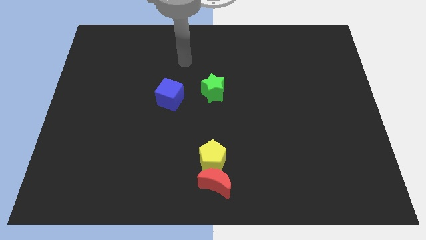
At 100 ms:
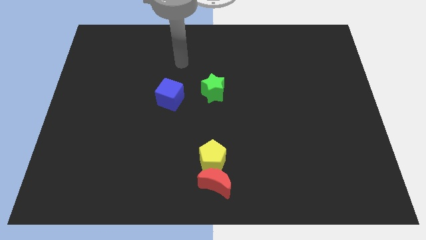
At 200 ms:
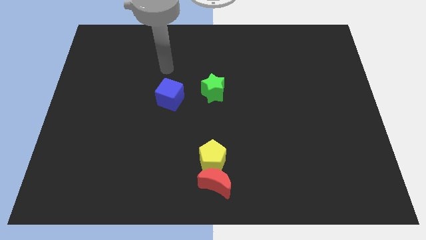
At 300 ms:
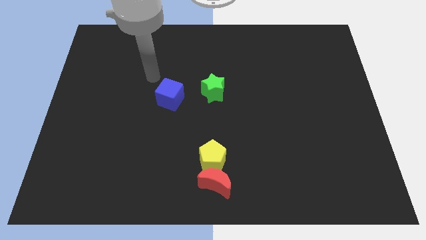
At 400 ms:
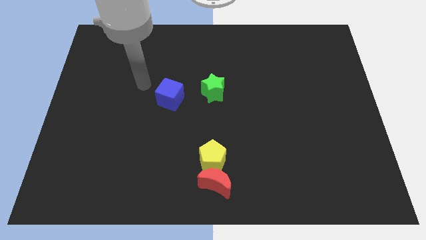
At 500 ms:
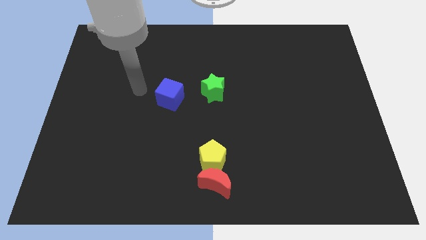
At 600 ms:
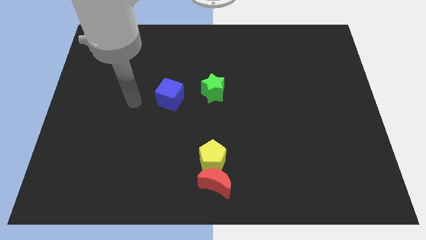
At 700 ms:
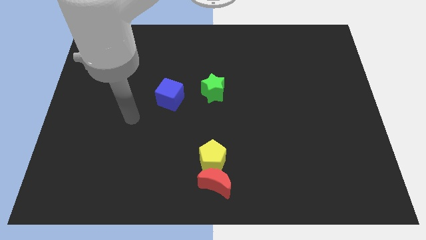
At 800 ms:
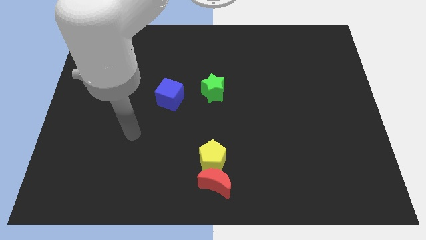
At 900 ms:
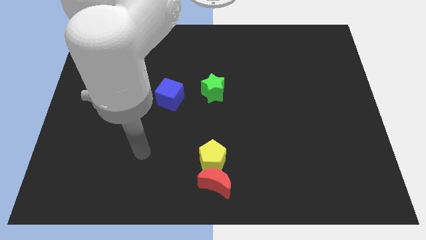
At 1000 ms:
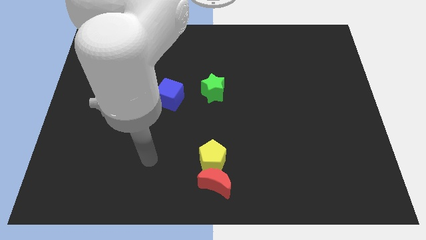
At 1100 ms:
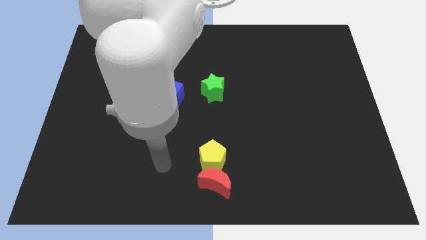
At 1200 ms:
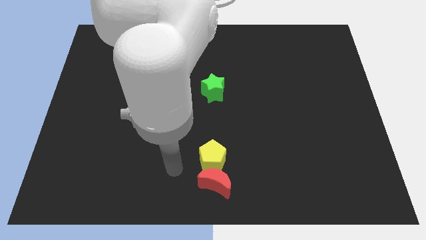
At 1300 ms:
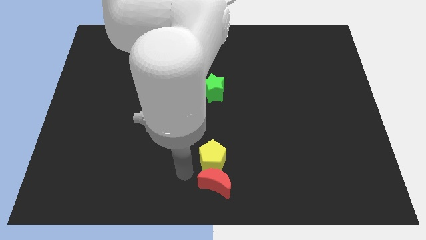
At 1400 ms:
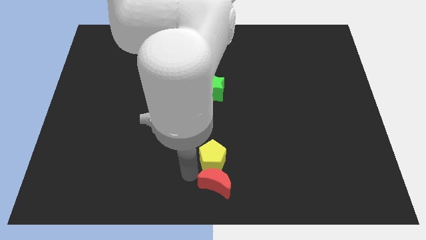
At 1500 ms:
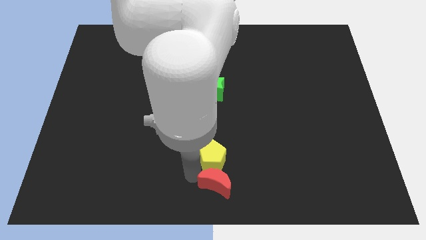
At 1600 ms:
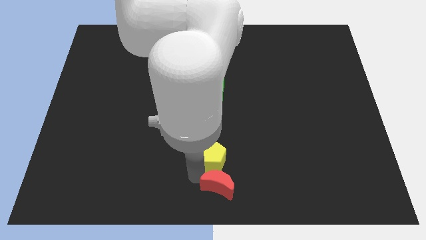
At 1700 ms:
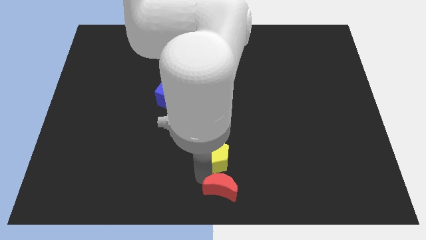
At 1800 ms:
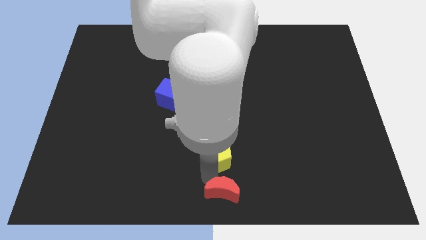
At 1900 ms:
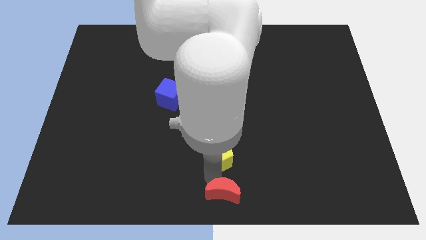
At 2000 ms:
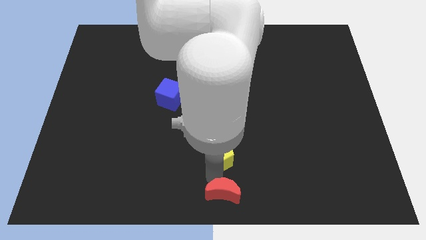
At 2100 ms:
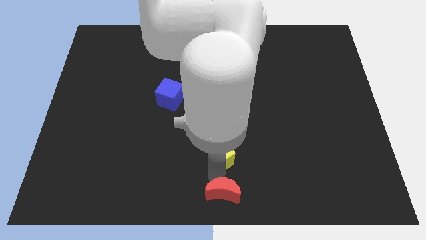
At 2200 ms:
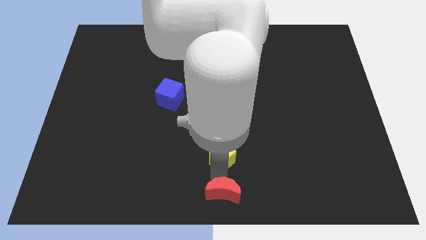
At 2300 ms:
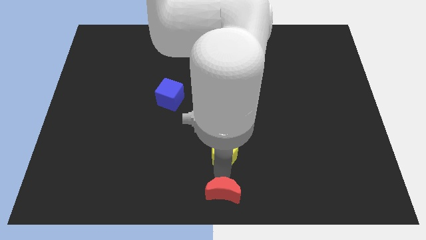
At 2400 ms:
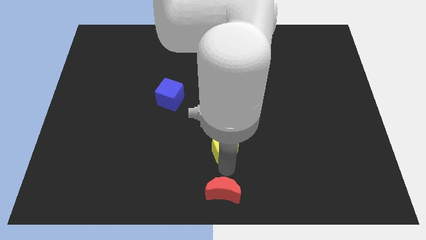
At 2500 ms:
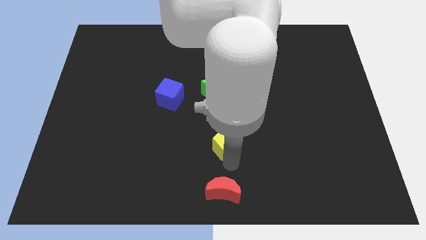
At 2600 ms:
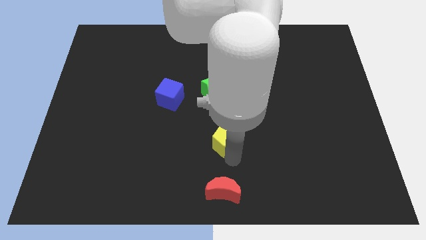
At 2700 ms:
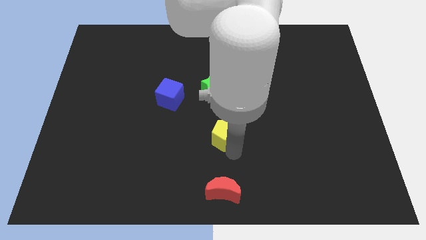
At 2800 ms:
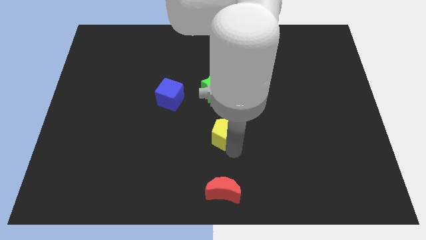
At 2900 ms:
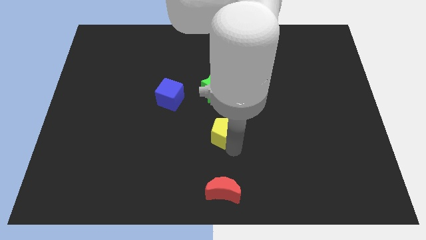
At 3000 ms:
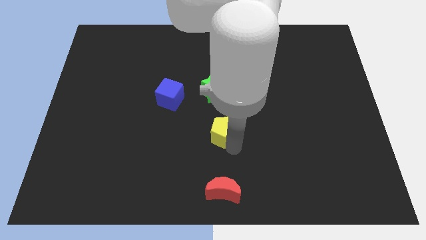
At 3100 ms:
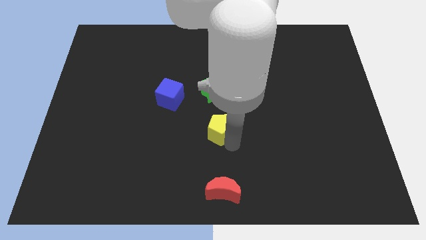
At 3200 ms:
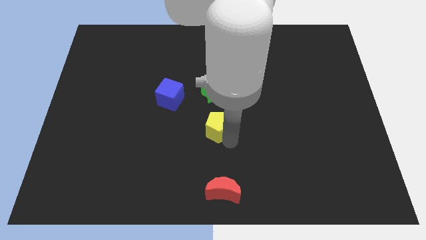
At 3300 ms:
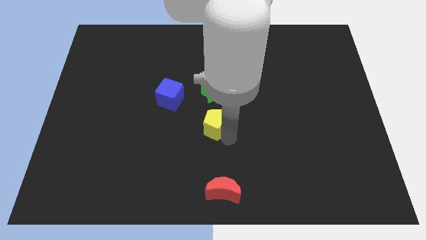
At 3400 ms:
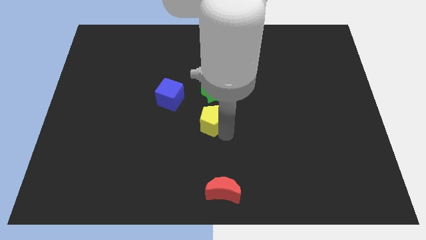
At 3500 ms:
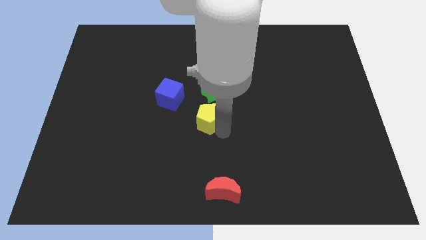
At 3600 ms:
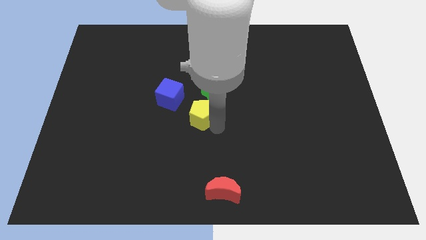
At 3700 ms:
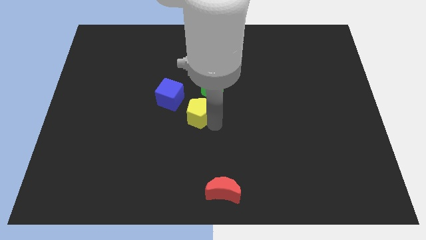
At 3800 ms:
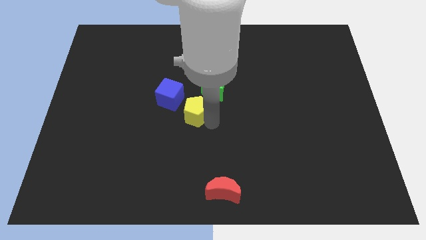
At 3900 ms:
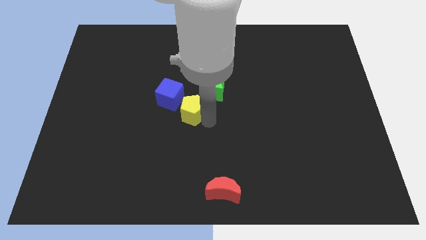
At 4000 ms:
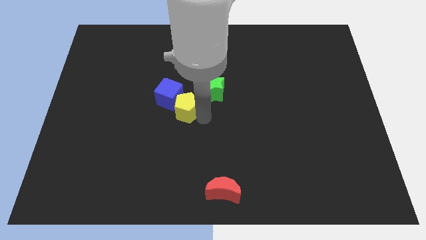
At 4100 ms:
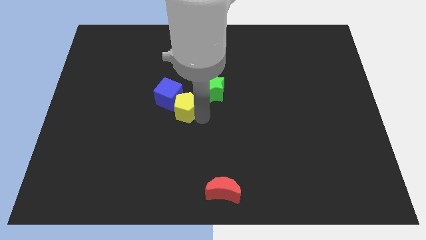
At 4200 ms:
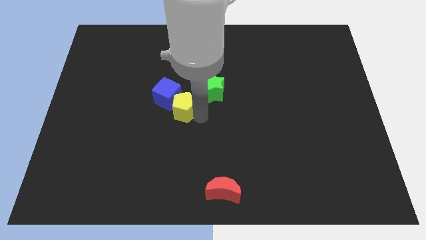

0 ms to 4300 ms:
slide the yellow pentagon towards the blue block

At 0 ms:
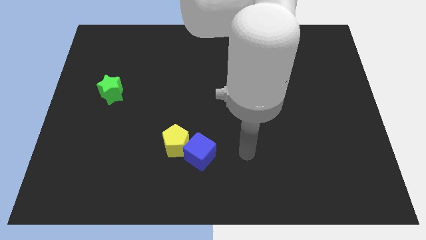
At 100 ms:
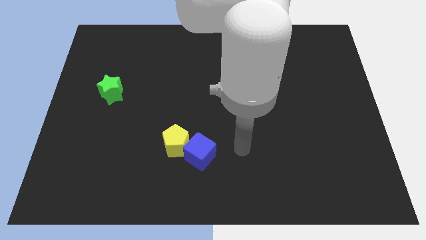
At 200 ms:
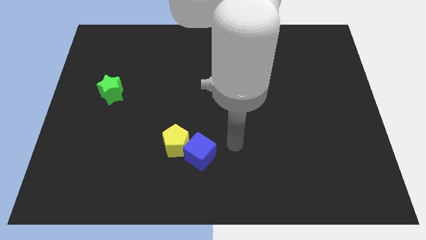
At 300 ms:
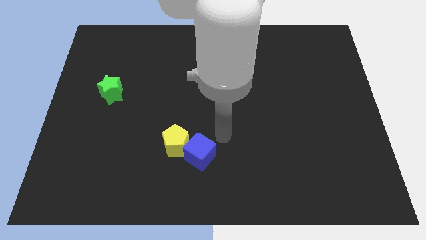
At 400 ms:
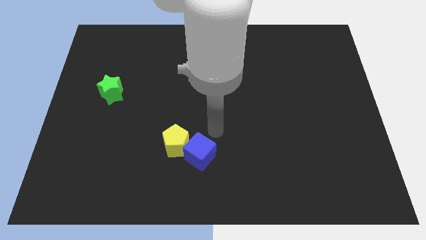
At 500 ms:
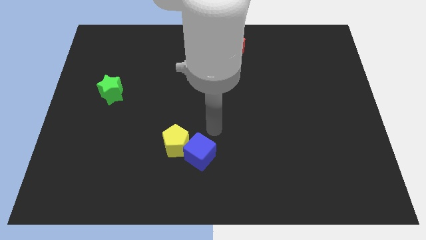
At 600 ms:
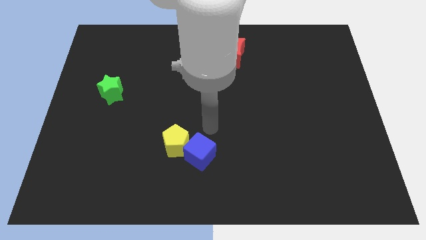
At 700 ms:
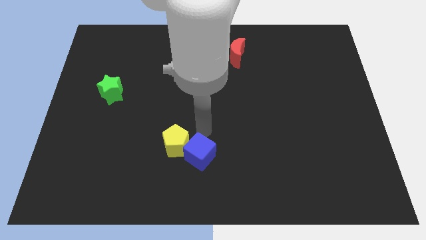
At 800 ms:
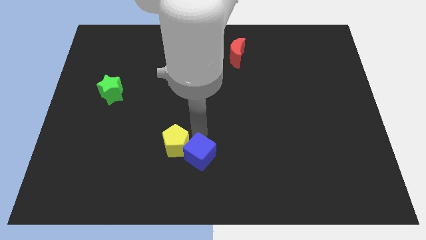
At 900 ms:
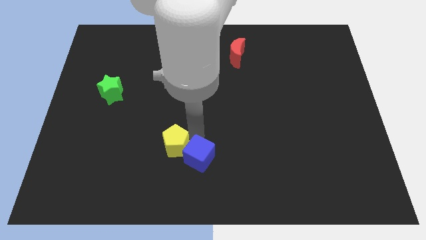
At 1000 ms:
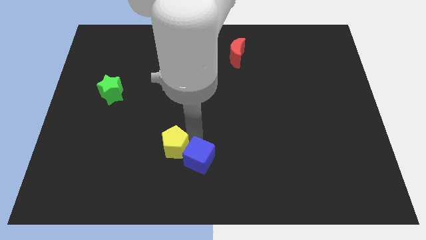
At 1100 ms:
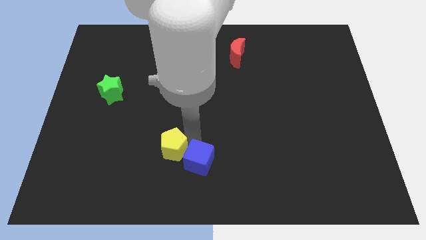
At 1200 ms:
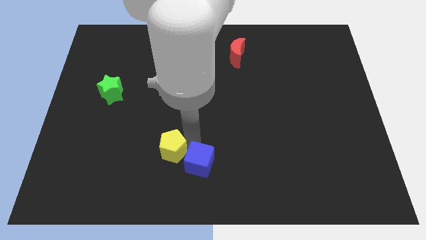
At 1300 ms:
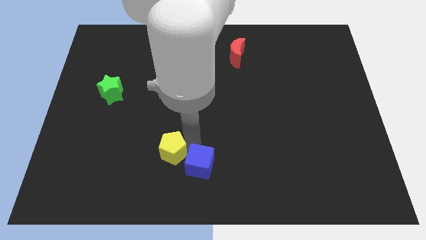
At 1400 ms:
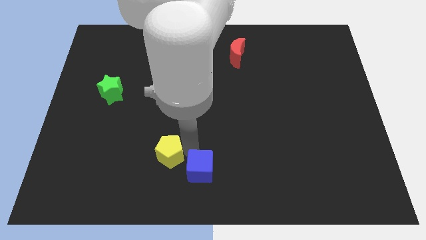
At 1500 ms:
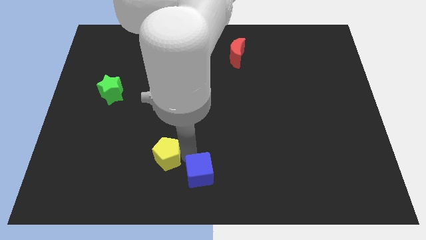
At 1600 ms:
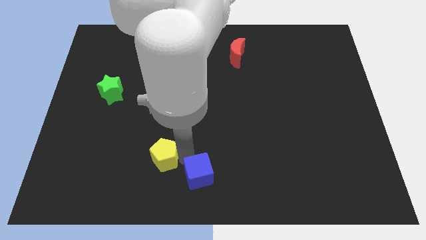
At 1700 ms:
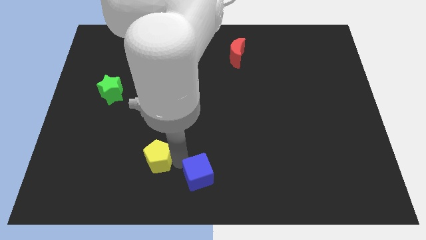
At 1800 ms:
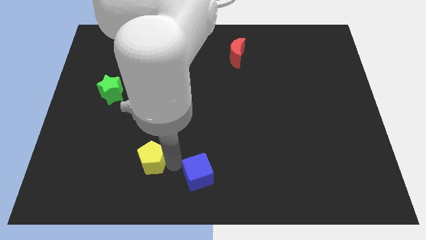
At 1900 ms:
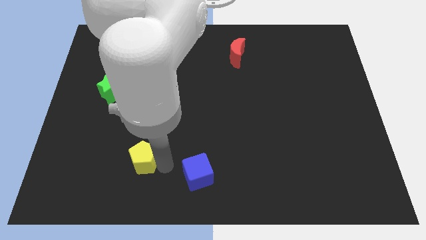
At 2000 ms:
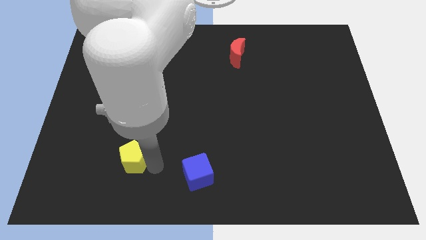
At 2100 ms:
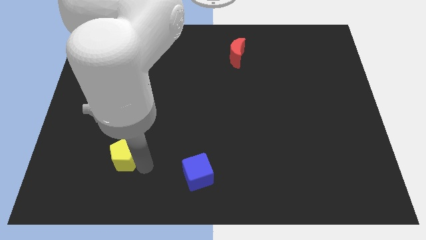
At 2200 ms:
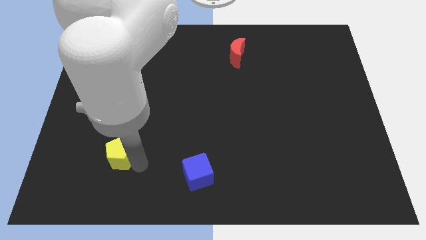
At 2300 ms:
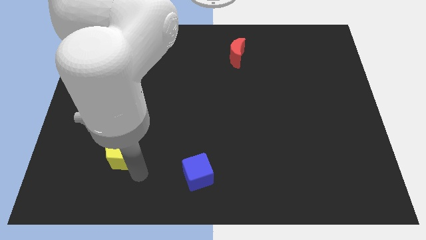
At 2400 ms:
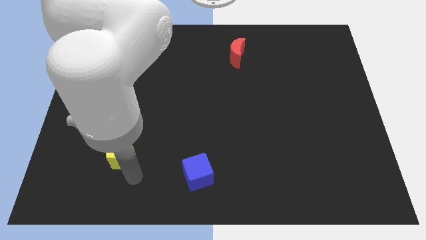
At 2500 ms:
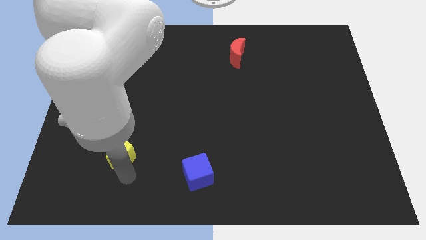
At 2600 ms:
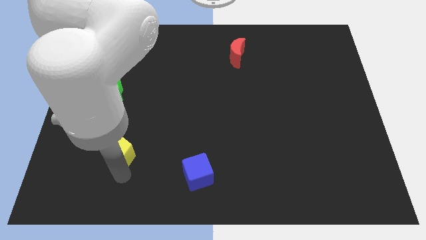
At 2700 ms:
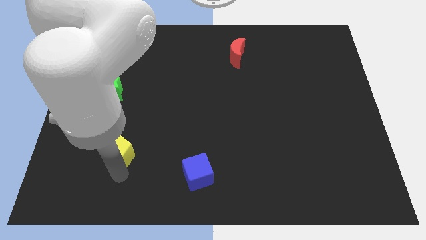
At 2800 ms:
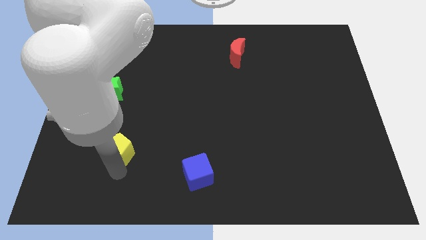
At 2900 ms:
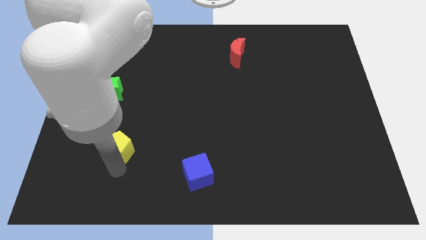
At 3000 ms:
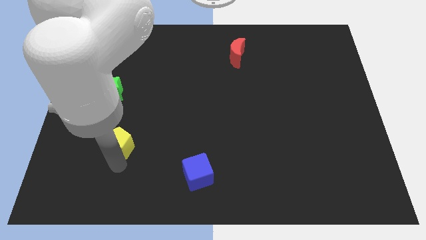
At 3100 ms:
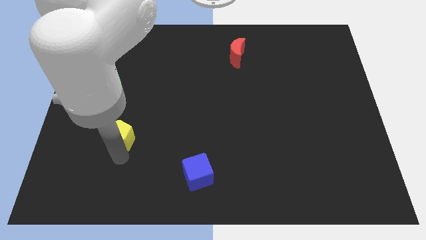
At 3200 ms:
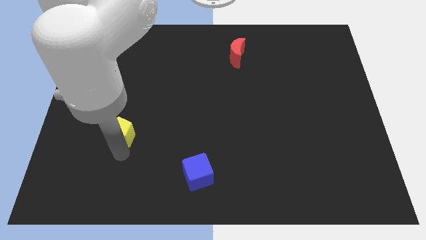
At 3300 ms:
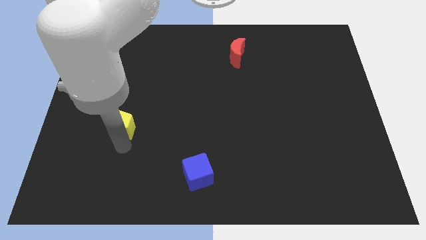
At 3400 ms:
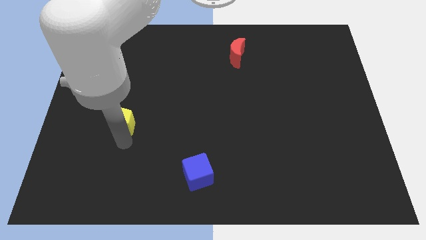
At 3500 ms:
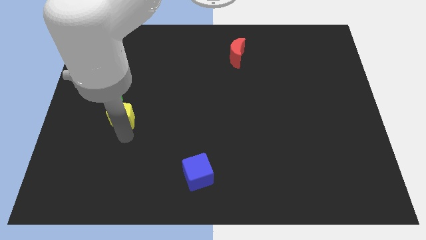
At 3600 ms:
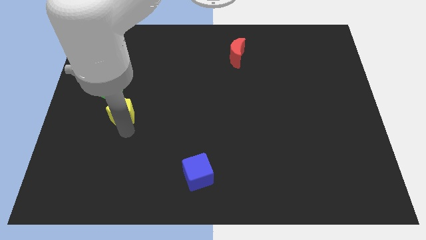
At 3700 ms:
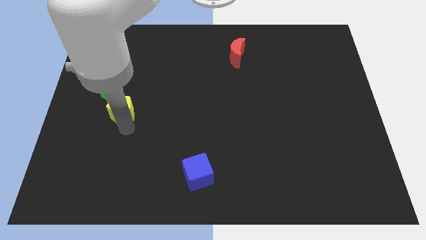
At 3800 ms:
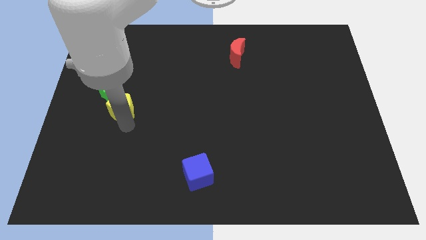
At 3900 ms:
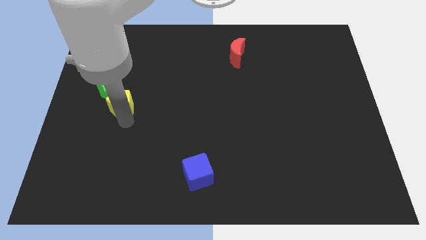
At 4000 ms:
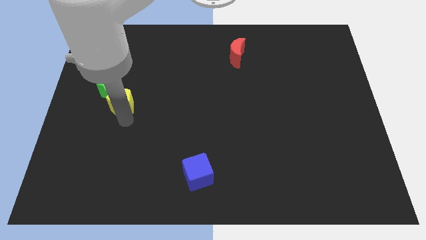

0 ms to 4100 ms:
push the pentagon to the green block

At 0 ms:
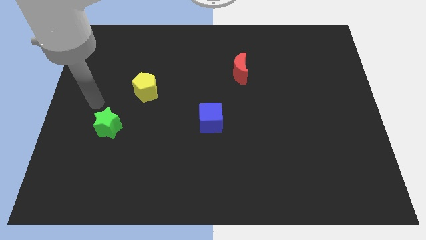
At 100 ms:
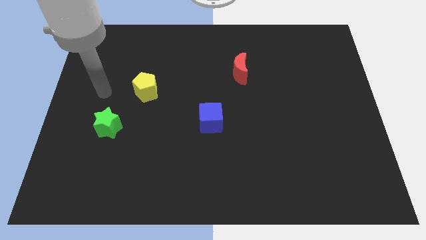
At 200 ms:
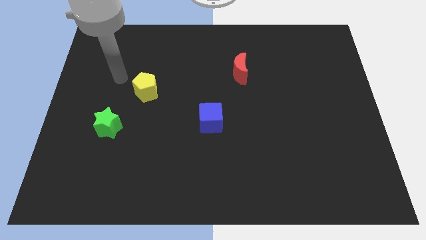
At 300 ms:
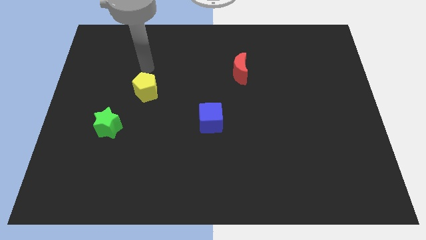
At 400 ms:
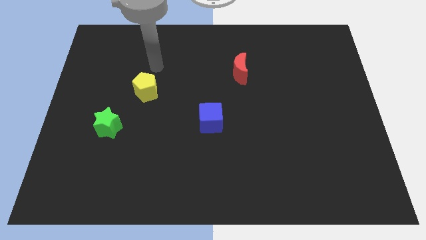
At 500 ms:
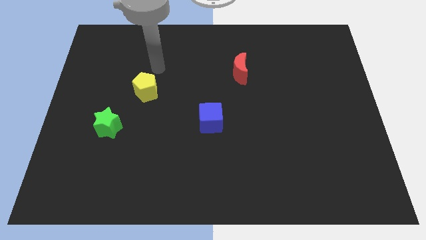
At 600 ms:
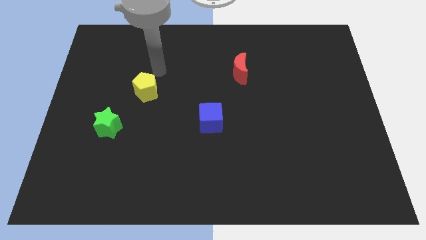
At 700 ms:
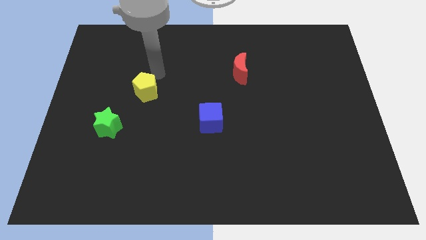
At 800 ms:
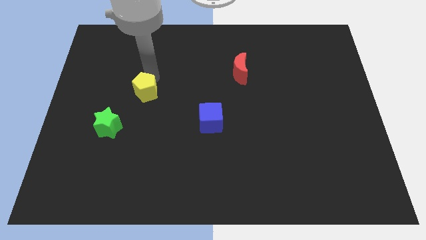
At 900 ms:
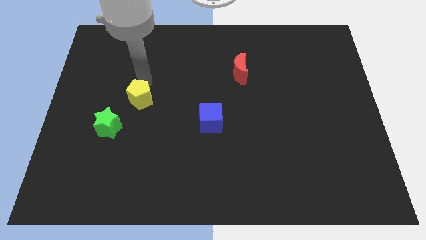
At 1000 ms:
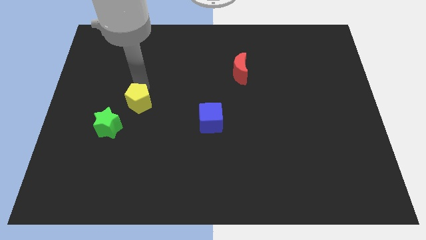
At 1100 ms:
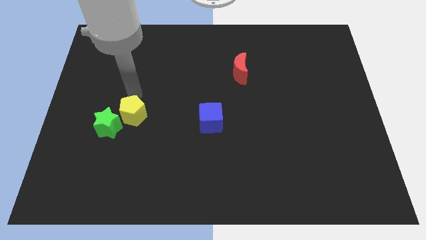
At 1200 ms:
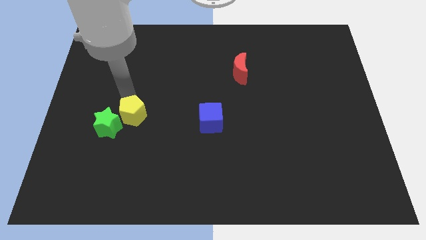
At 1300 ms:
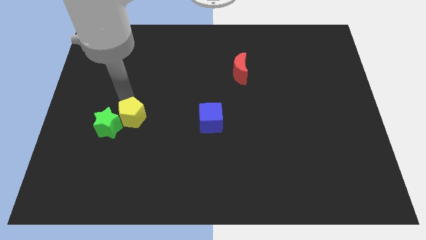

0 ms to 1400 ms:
slide the yellow pentagon to the green block
